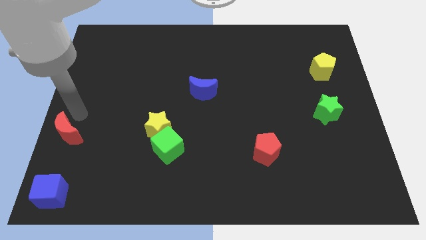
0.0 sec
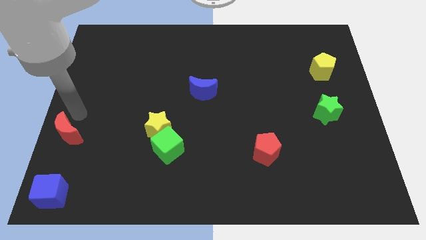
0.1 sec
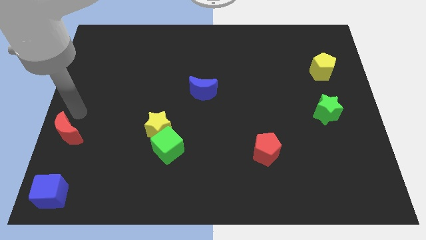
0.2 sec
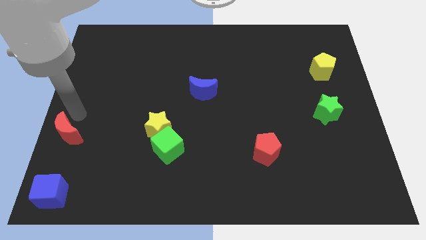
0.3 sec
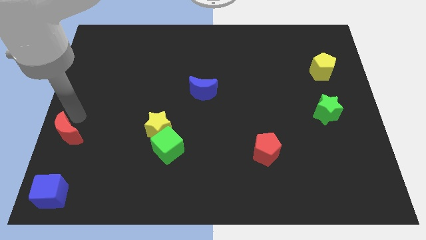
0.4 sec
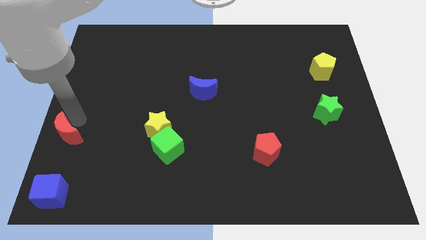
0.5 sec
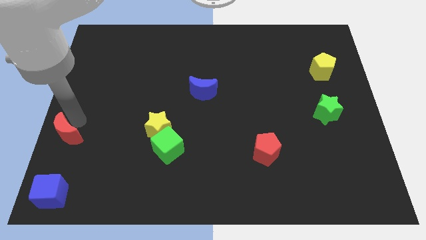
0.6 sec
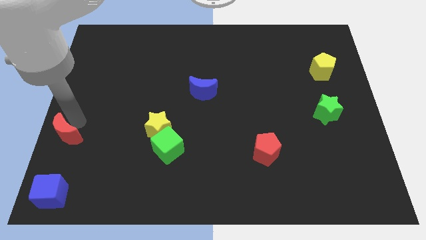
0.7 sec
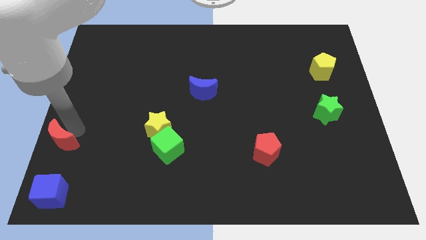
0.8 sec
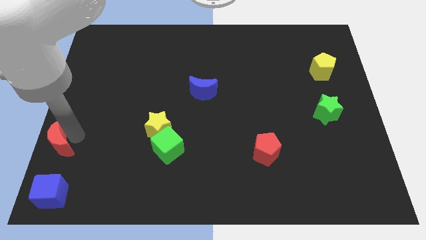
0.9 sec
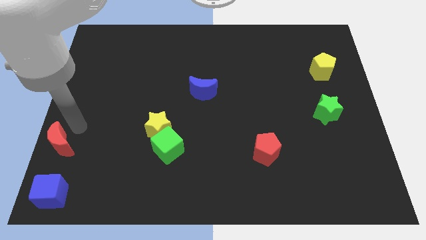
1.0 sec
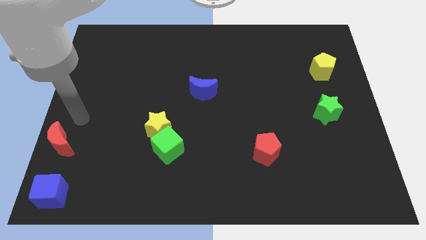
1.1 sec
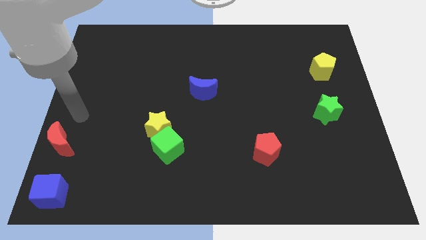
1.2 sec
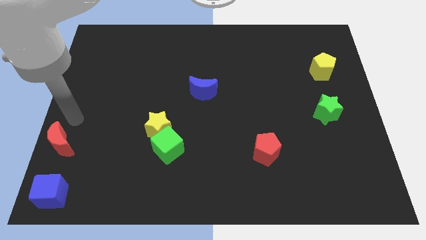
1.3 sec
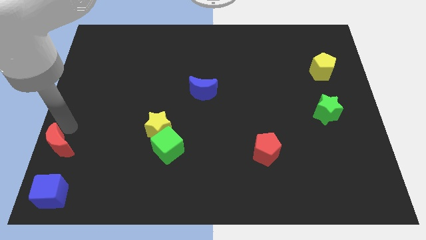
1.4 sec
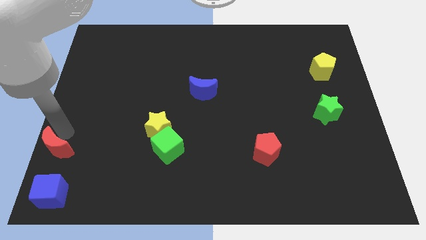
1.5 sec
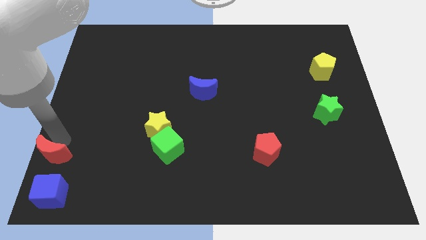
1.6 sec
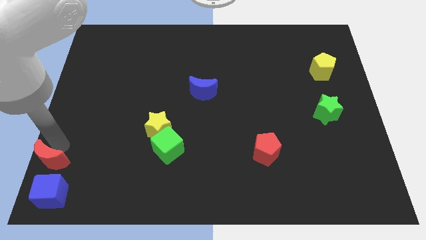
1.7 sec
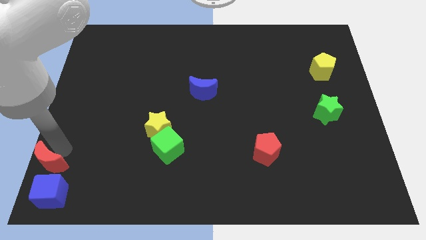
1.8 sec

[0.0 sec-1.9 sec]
move the red moon on top of the blue moon

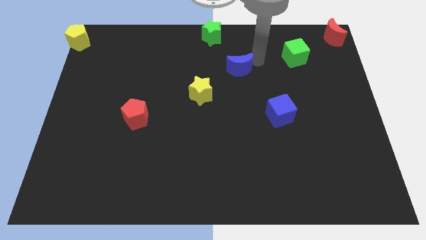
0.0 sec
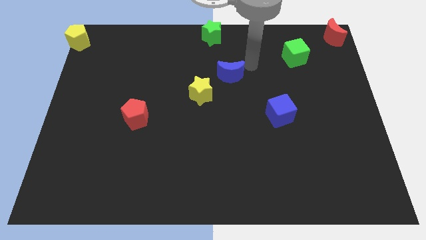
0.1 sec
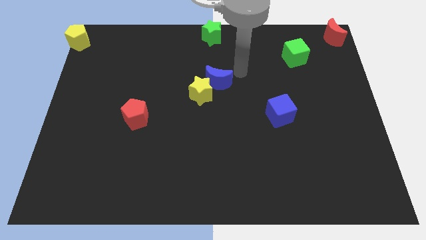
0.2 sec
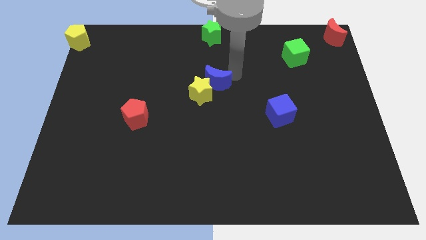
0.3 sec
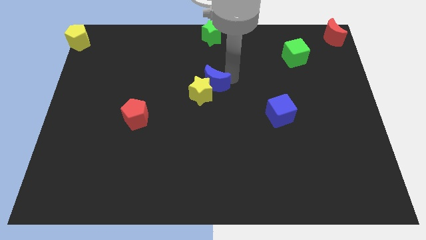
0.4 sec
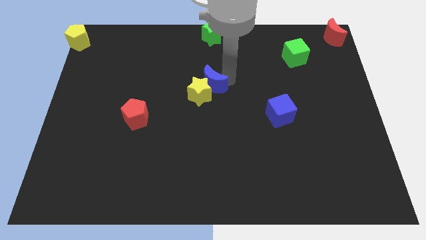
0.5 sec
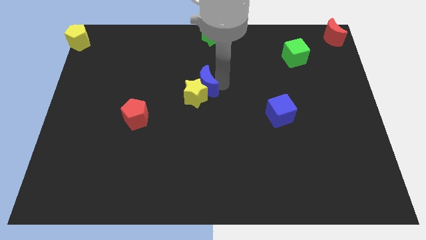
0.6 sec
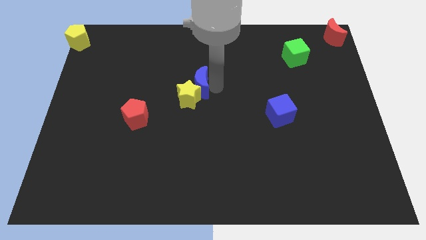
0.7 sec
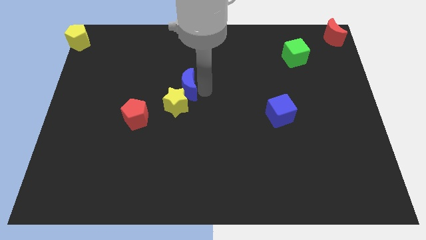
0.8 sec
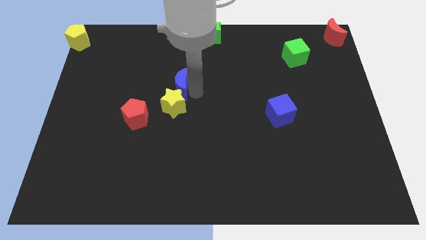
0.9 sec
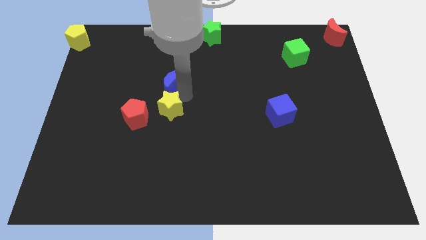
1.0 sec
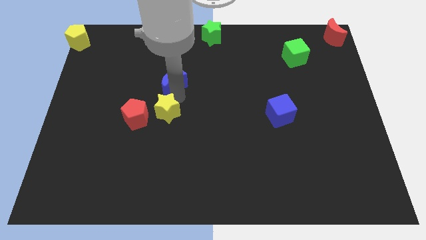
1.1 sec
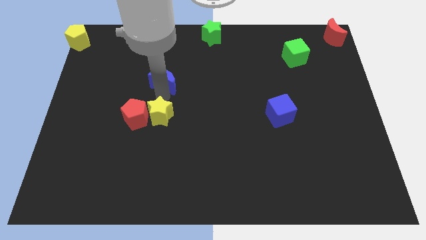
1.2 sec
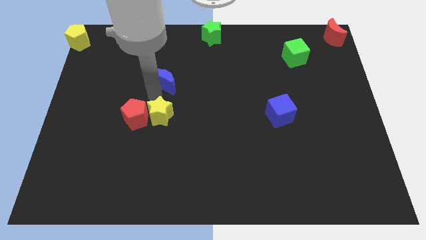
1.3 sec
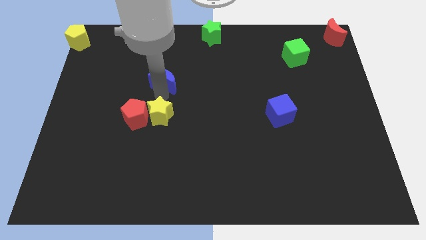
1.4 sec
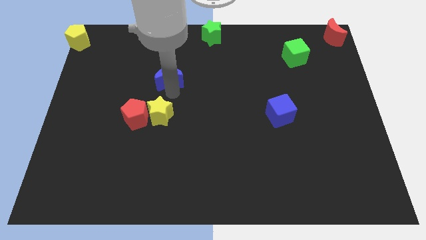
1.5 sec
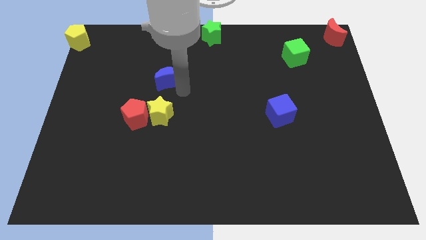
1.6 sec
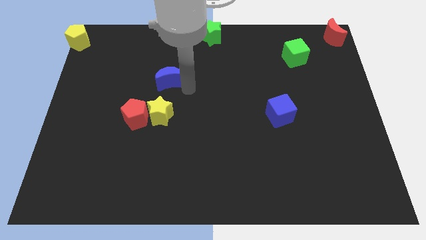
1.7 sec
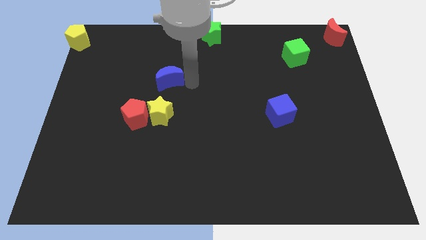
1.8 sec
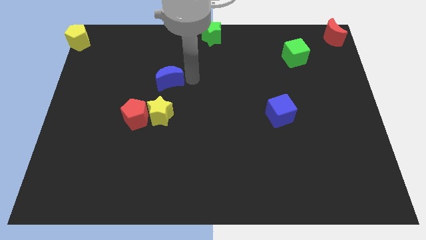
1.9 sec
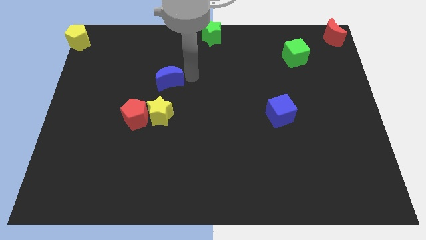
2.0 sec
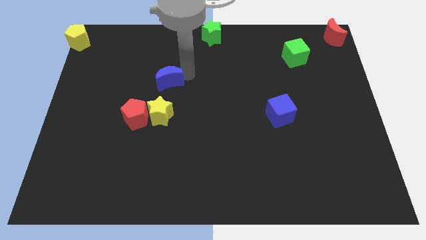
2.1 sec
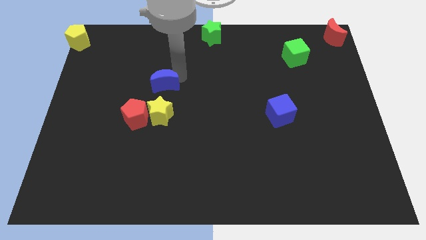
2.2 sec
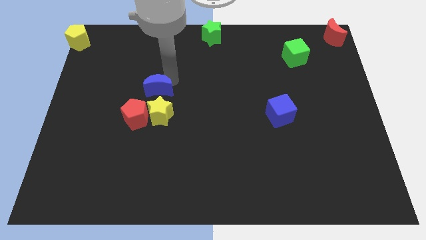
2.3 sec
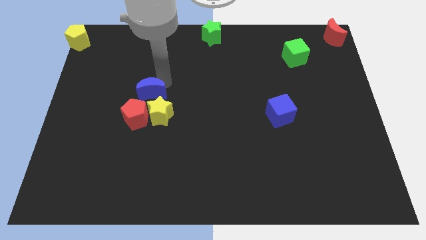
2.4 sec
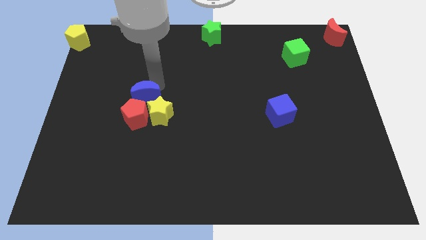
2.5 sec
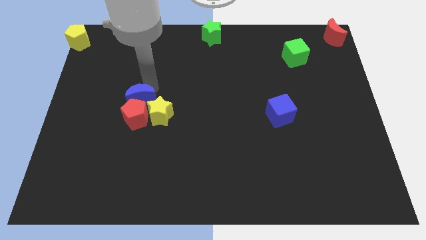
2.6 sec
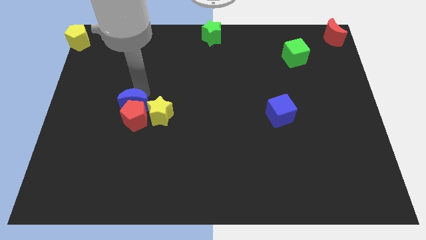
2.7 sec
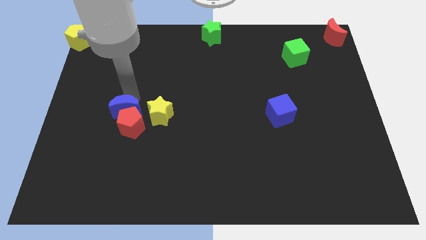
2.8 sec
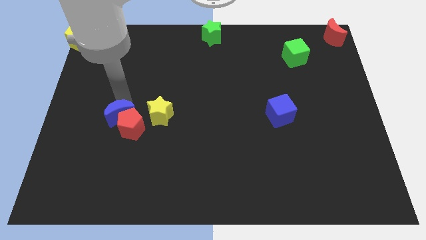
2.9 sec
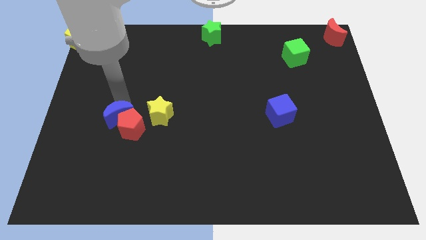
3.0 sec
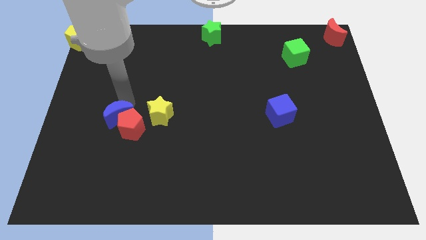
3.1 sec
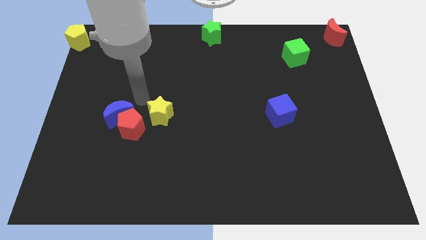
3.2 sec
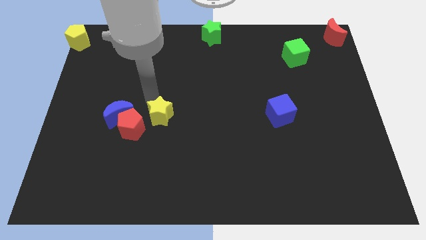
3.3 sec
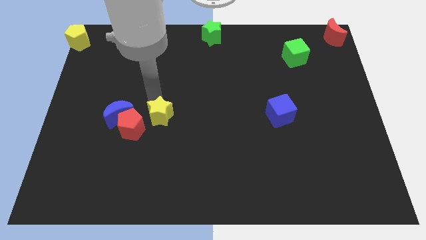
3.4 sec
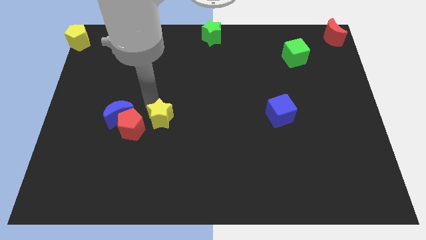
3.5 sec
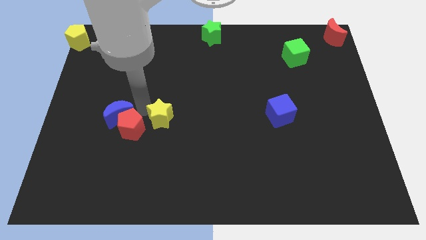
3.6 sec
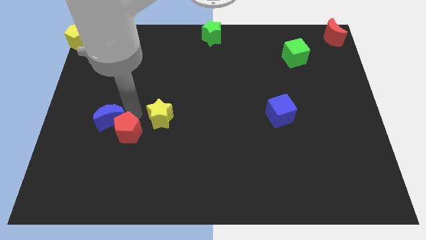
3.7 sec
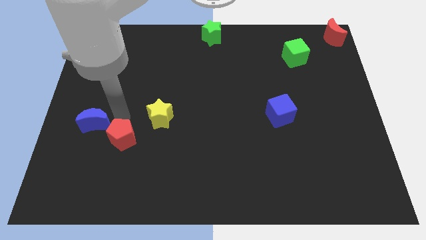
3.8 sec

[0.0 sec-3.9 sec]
place the blue crescent above the red pentagon

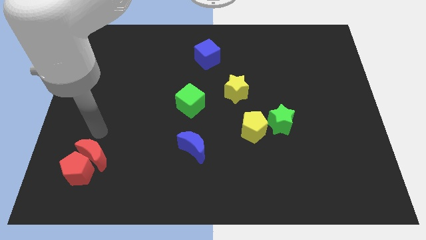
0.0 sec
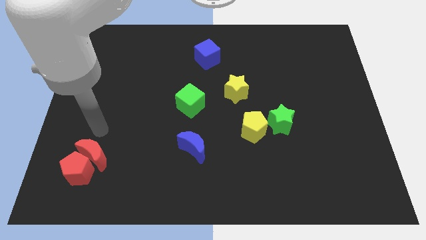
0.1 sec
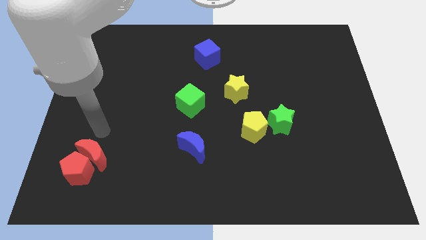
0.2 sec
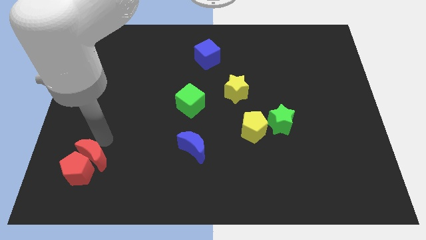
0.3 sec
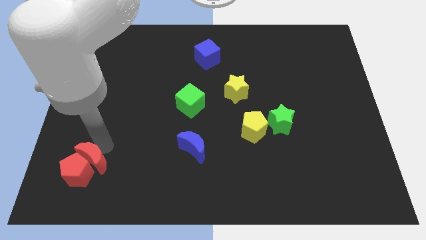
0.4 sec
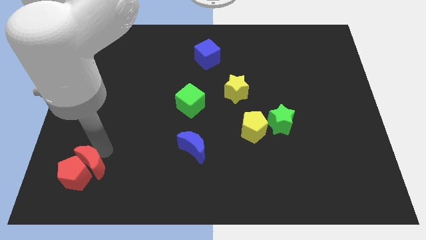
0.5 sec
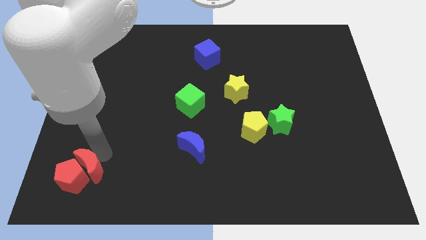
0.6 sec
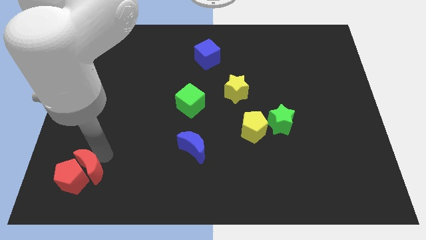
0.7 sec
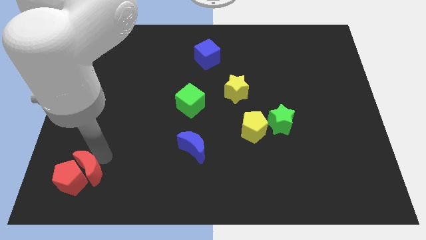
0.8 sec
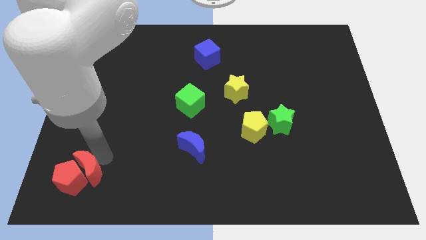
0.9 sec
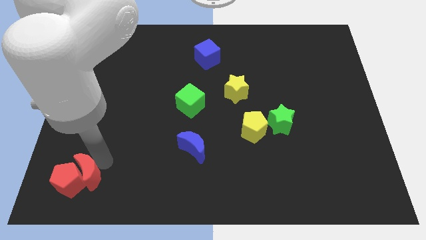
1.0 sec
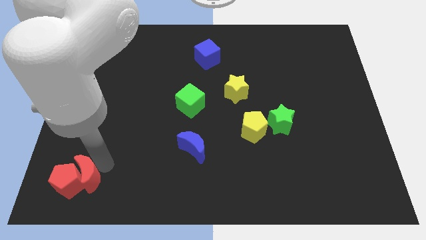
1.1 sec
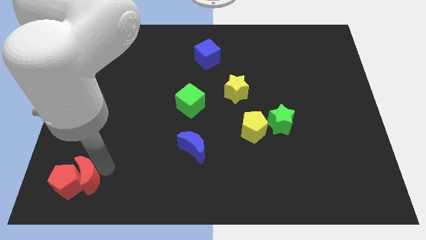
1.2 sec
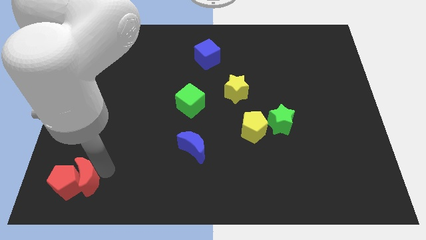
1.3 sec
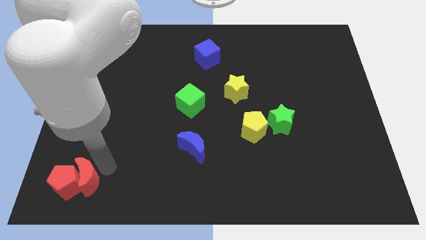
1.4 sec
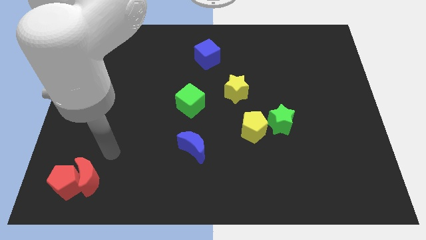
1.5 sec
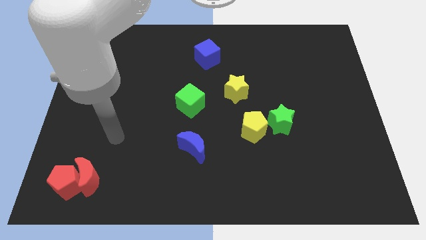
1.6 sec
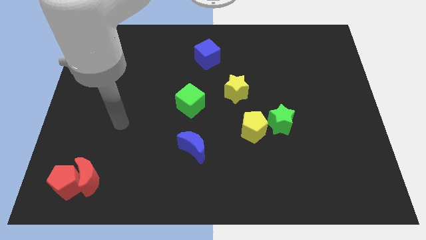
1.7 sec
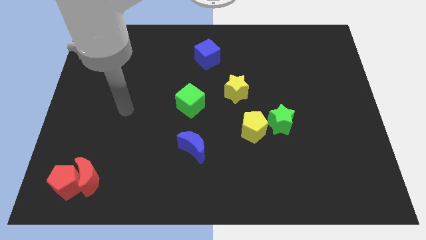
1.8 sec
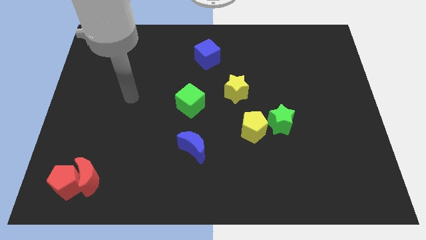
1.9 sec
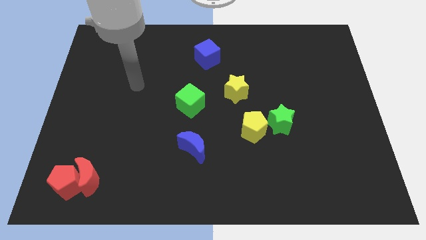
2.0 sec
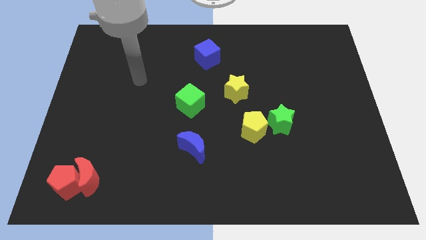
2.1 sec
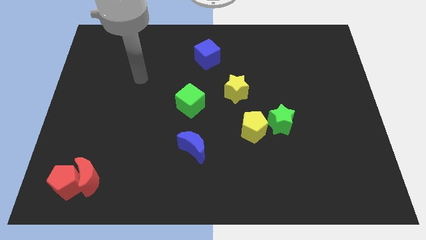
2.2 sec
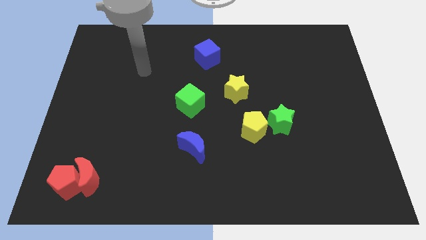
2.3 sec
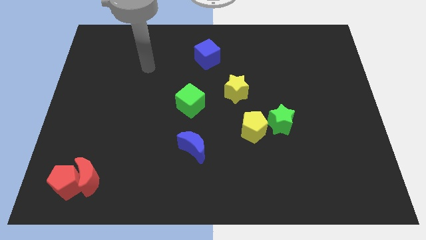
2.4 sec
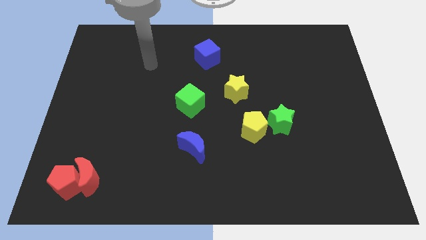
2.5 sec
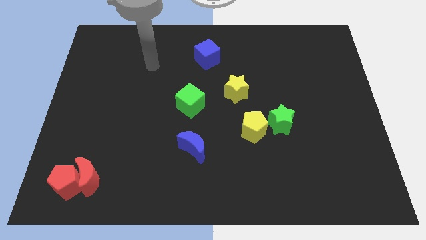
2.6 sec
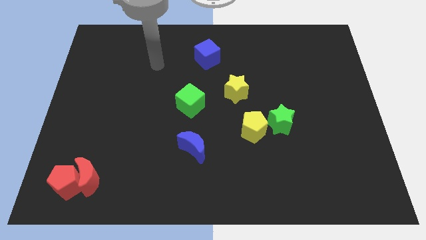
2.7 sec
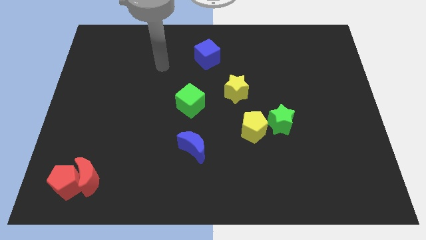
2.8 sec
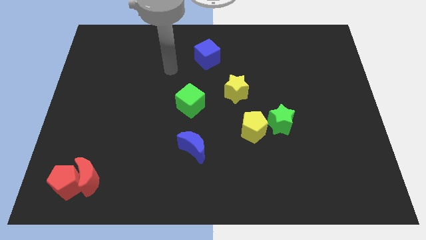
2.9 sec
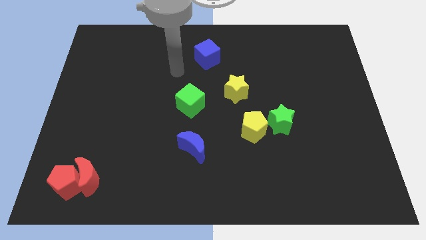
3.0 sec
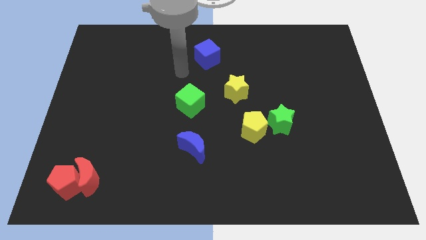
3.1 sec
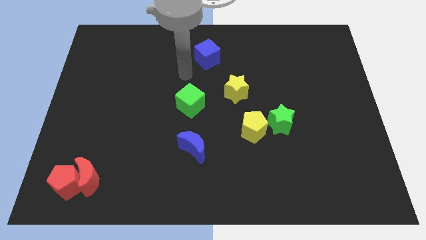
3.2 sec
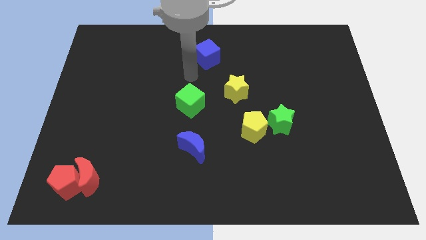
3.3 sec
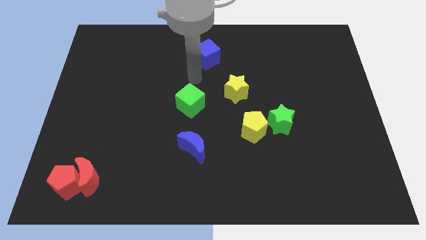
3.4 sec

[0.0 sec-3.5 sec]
slightly move red blocks towards the bottom left
